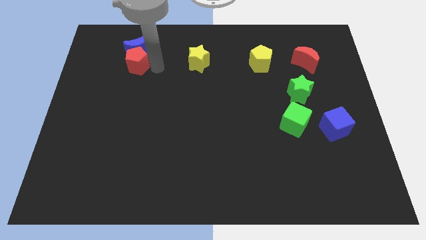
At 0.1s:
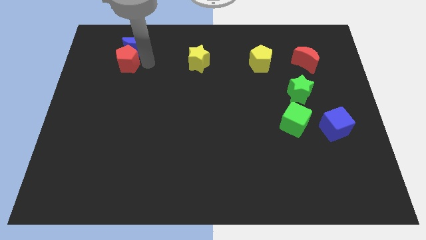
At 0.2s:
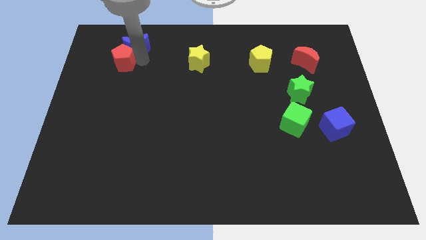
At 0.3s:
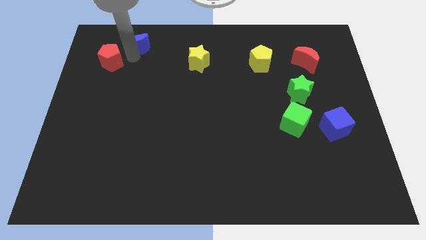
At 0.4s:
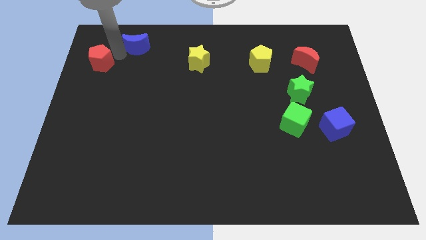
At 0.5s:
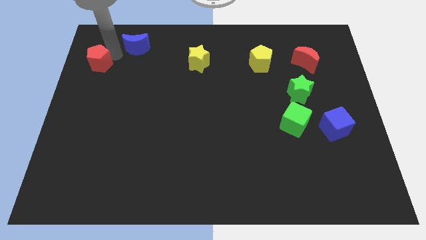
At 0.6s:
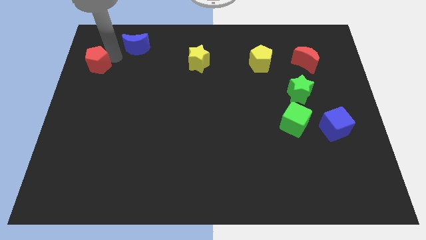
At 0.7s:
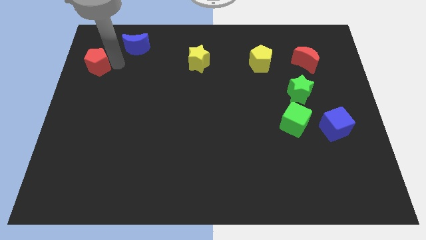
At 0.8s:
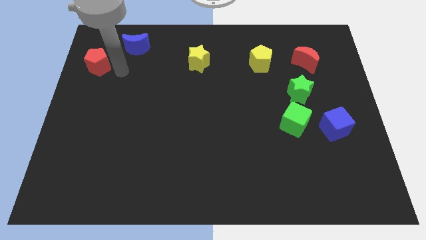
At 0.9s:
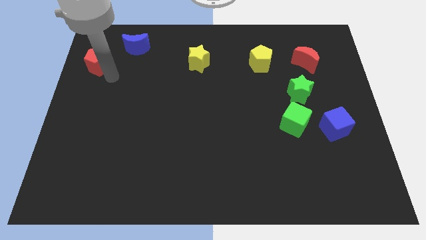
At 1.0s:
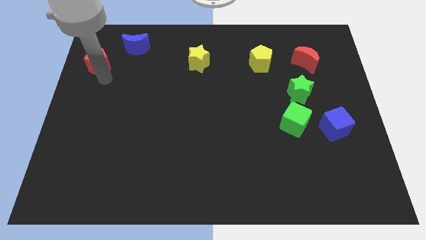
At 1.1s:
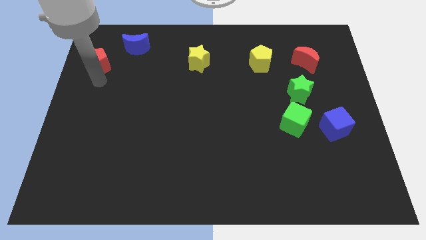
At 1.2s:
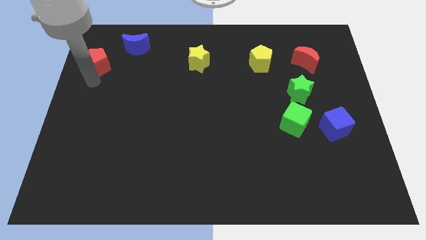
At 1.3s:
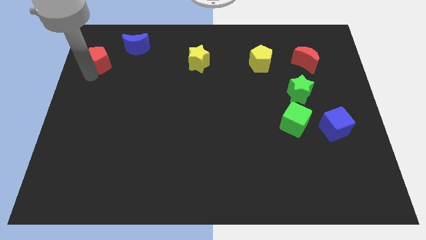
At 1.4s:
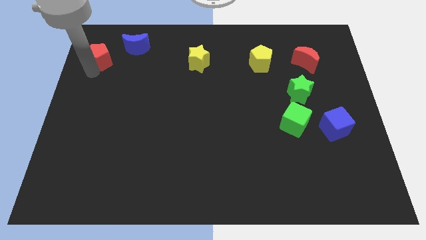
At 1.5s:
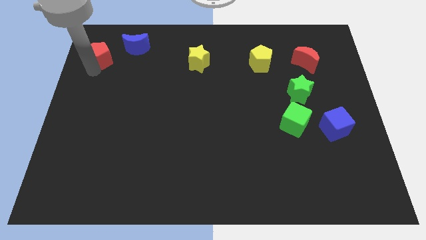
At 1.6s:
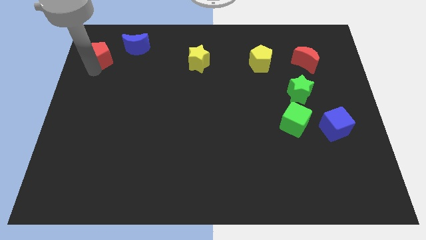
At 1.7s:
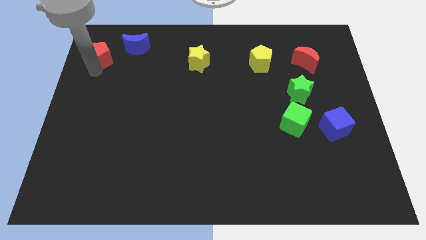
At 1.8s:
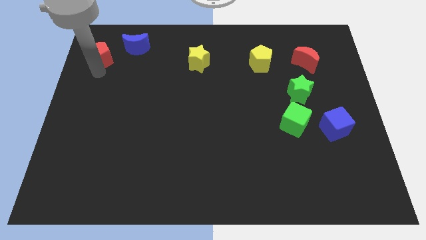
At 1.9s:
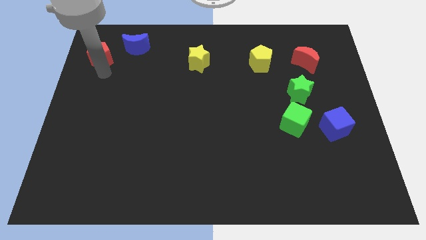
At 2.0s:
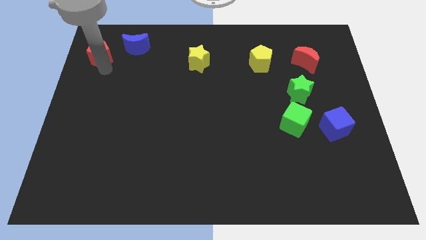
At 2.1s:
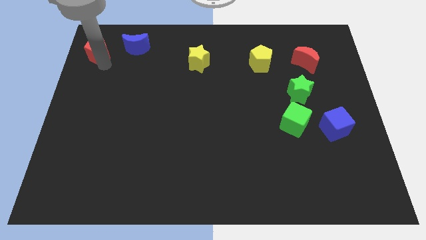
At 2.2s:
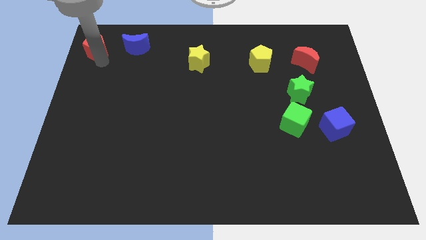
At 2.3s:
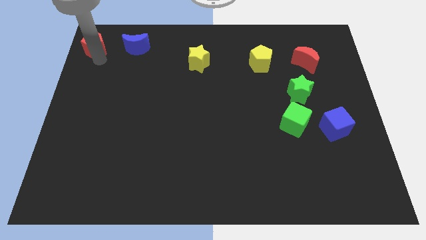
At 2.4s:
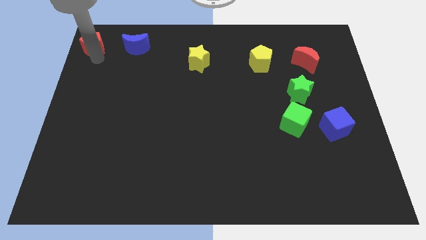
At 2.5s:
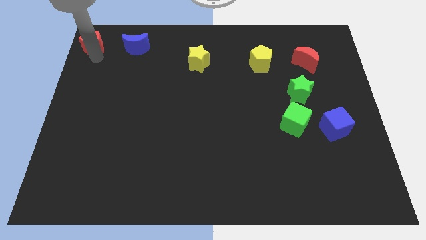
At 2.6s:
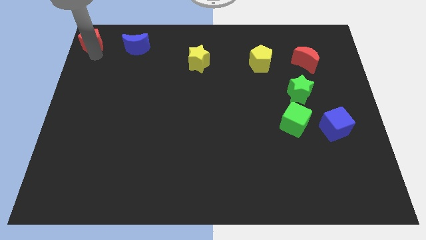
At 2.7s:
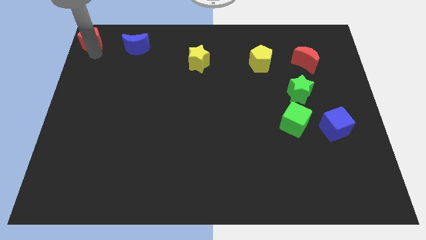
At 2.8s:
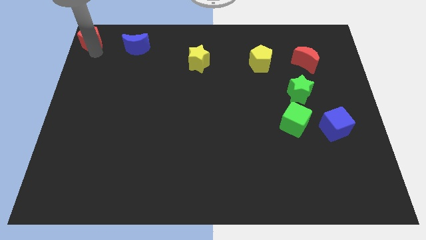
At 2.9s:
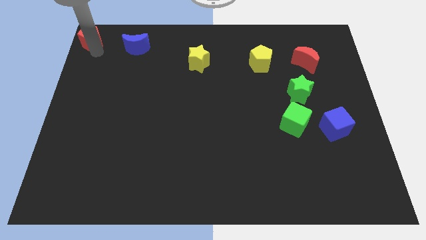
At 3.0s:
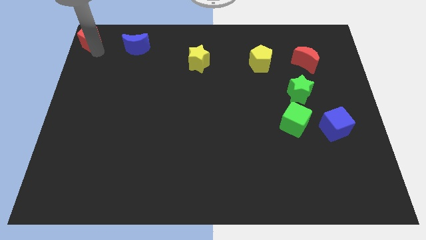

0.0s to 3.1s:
push red pentagon towards the top left corner

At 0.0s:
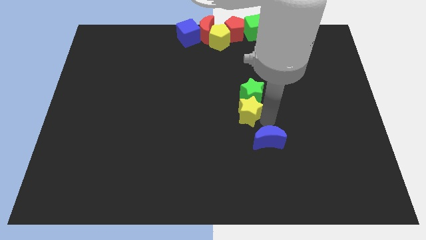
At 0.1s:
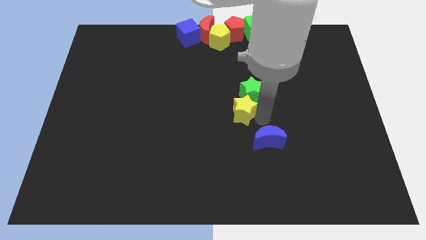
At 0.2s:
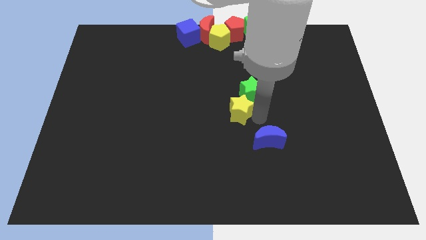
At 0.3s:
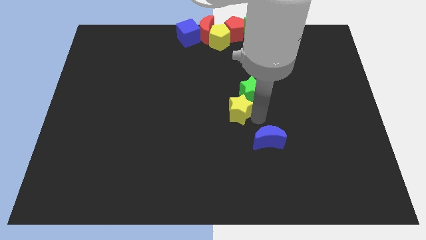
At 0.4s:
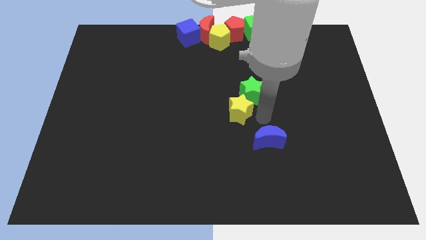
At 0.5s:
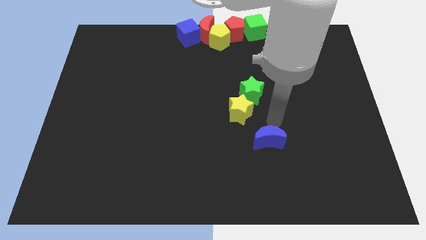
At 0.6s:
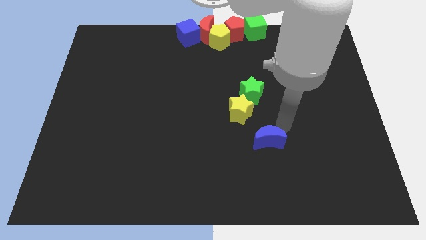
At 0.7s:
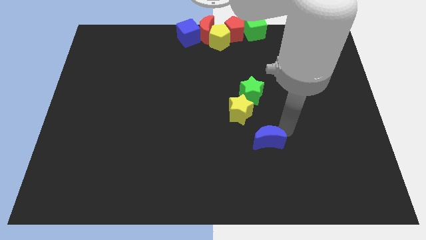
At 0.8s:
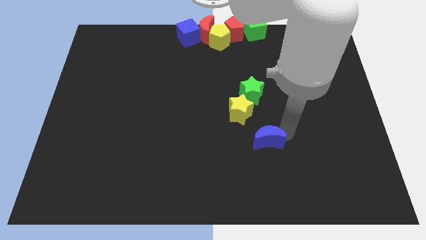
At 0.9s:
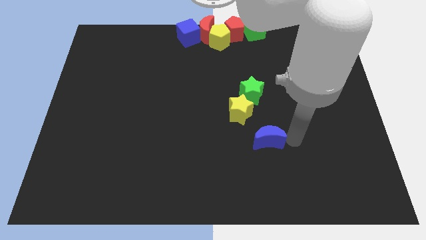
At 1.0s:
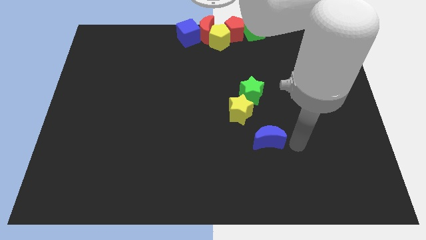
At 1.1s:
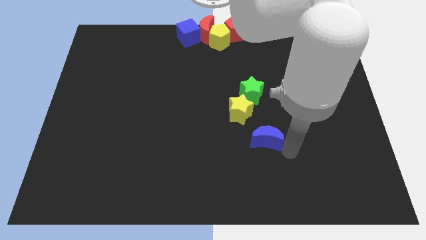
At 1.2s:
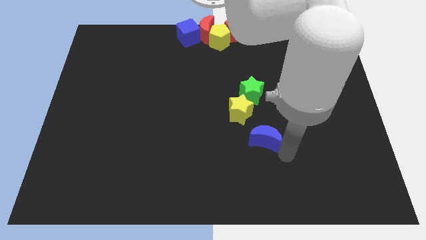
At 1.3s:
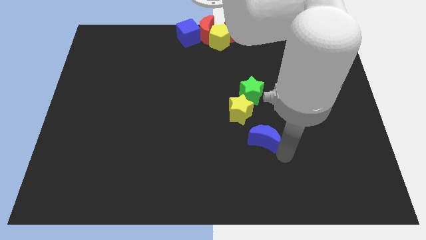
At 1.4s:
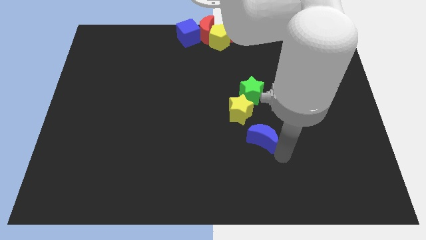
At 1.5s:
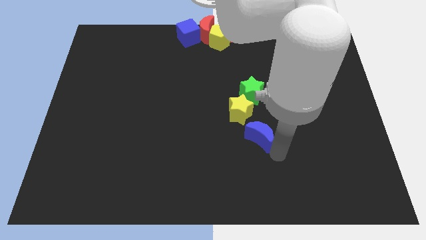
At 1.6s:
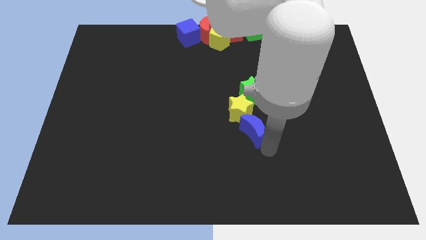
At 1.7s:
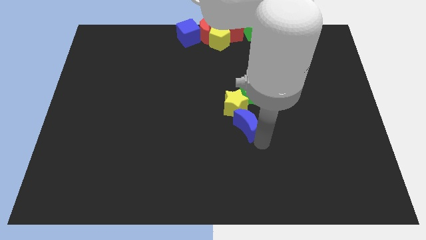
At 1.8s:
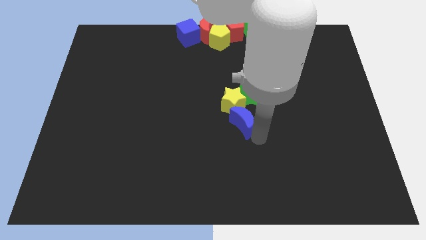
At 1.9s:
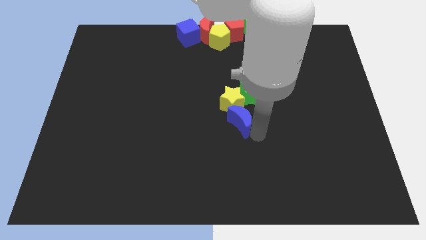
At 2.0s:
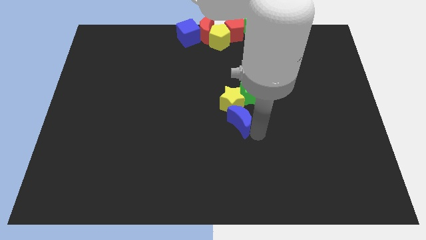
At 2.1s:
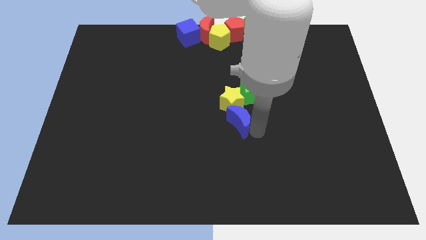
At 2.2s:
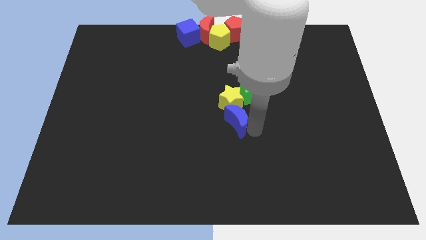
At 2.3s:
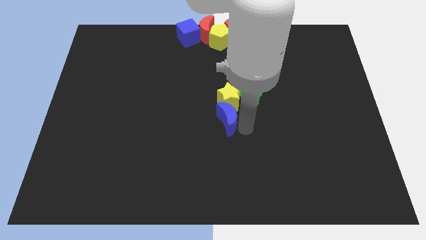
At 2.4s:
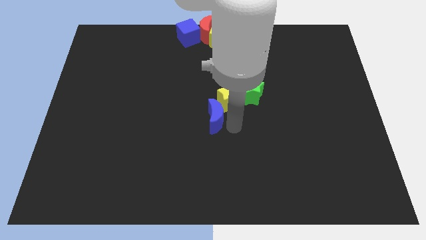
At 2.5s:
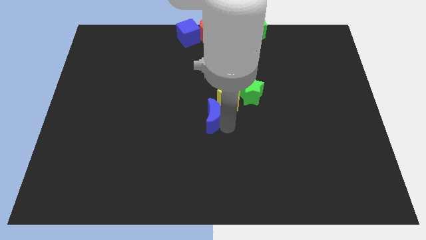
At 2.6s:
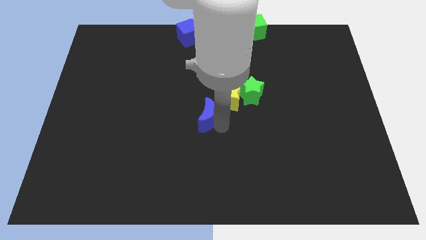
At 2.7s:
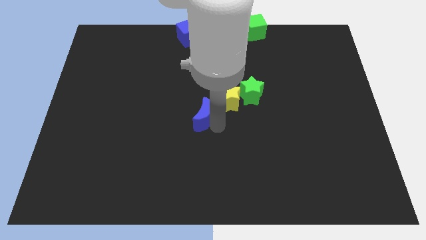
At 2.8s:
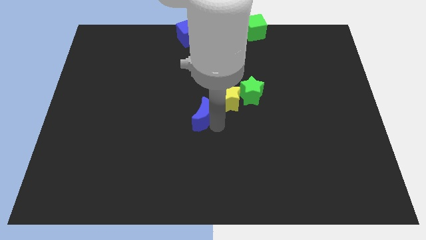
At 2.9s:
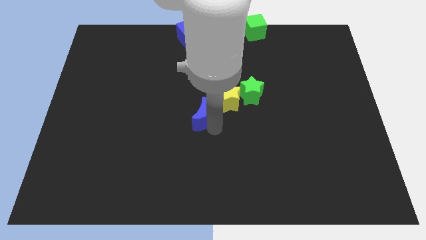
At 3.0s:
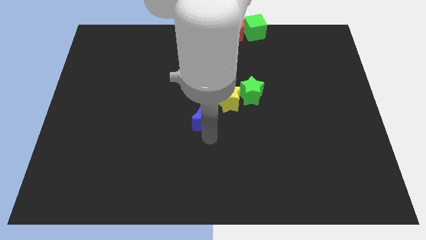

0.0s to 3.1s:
push the blue crescent slightly to the upwards along with the yellow star

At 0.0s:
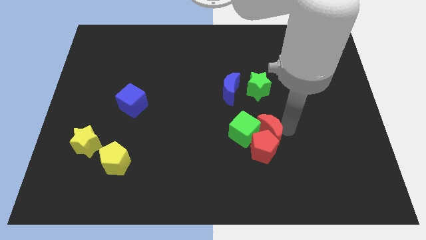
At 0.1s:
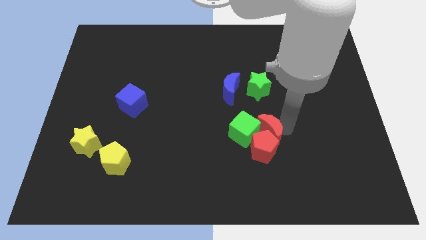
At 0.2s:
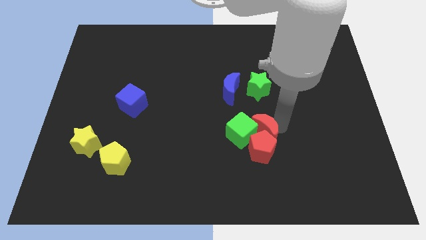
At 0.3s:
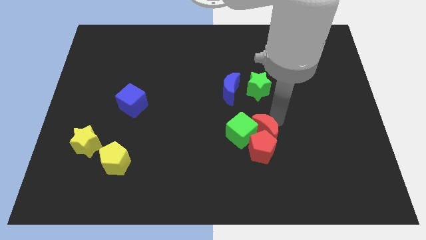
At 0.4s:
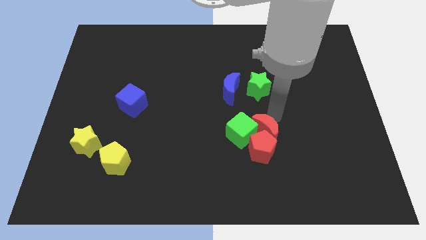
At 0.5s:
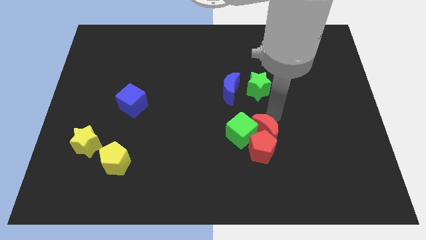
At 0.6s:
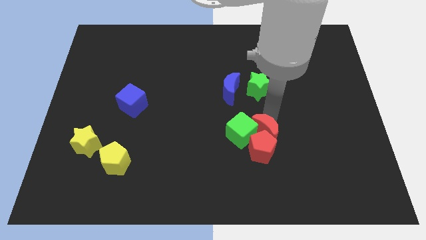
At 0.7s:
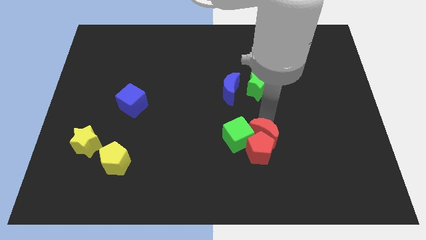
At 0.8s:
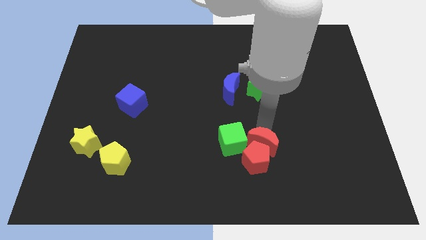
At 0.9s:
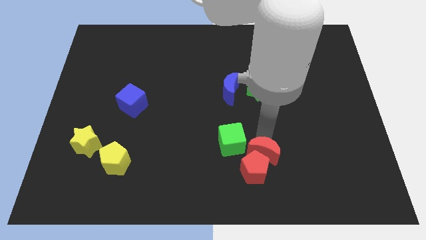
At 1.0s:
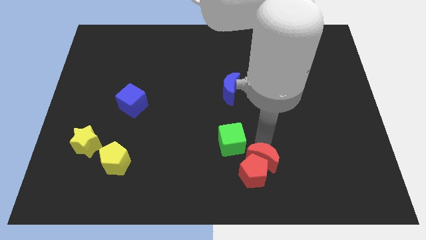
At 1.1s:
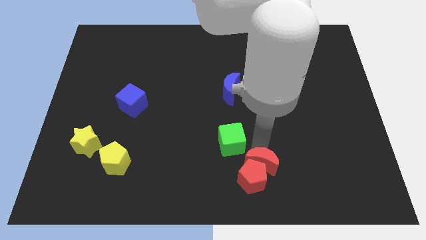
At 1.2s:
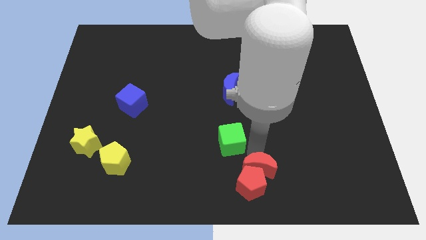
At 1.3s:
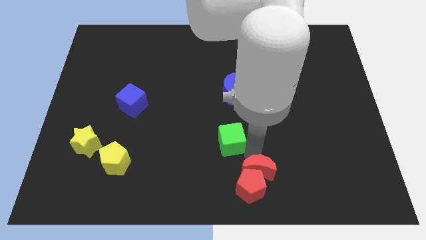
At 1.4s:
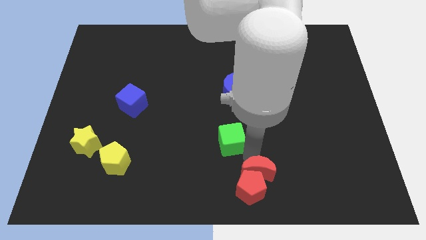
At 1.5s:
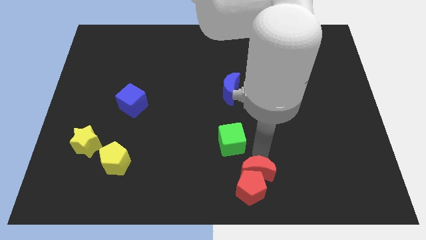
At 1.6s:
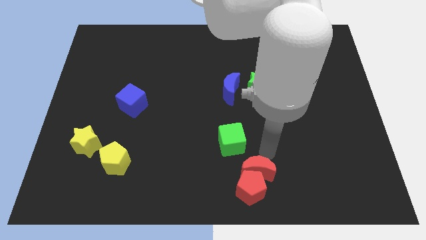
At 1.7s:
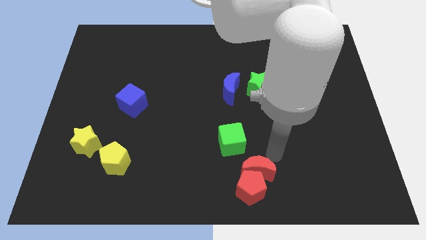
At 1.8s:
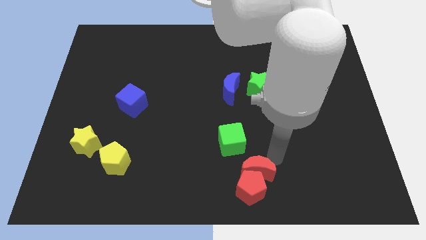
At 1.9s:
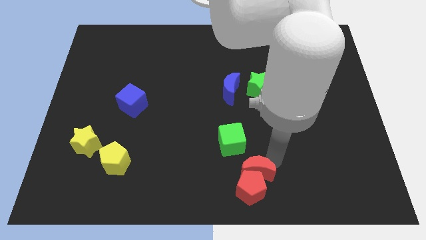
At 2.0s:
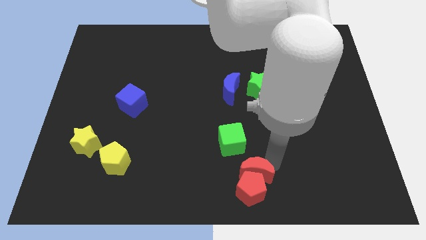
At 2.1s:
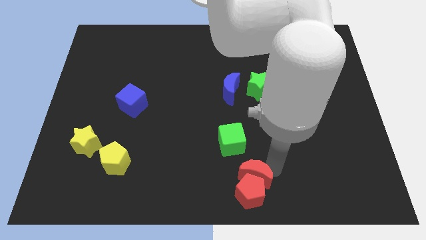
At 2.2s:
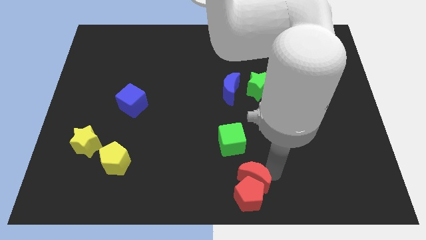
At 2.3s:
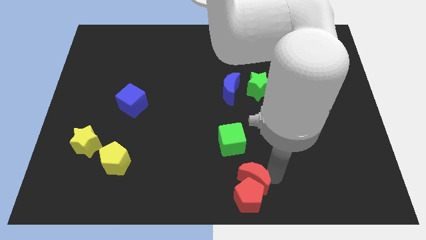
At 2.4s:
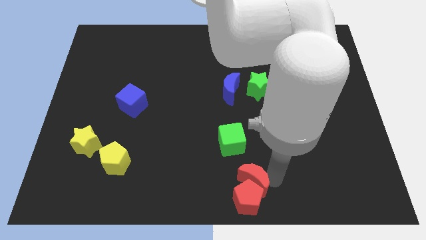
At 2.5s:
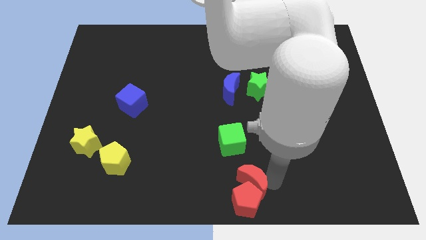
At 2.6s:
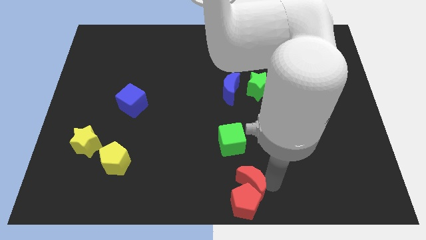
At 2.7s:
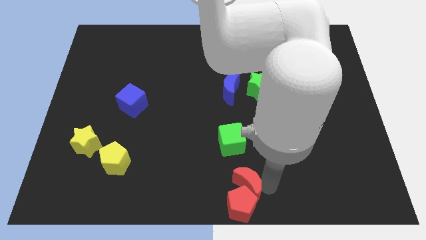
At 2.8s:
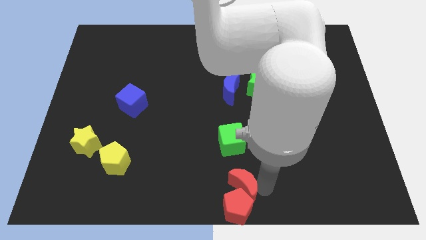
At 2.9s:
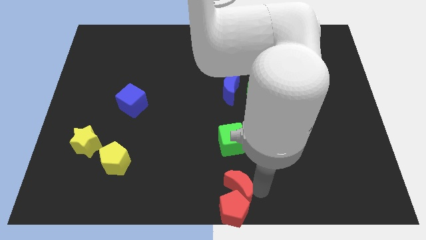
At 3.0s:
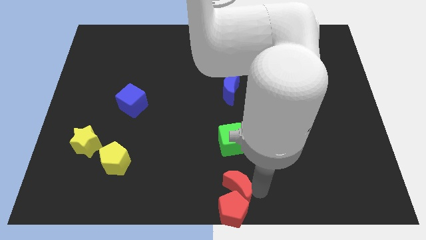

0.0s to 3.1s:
move the red blocks to the bottom center of the board
